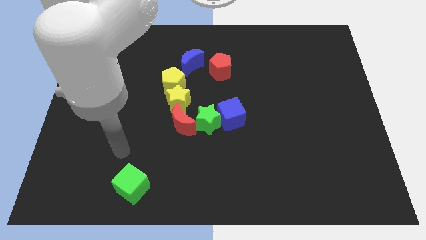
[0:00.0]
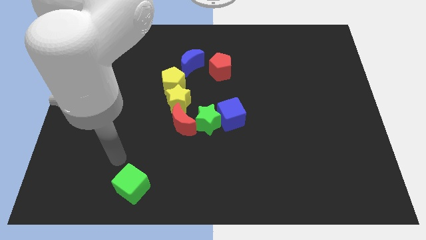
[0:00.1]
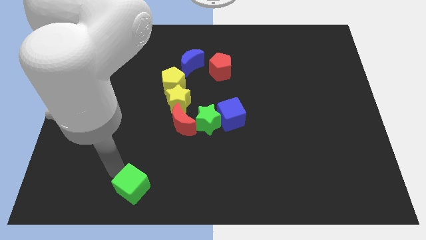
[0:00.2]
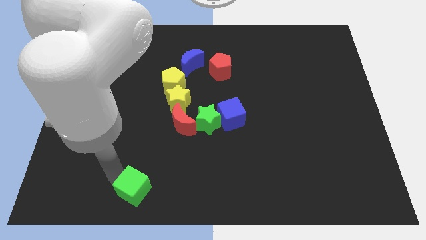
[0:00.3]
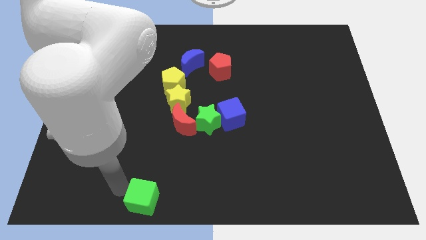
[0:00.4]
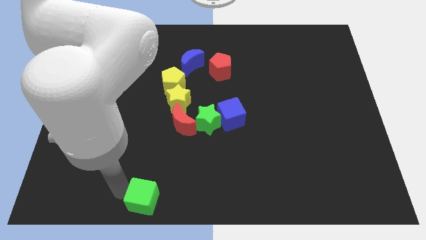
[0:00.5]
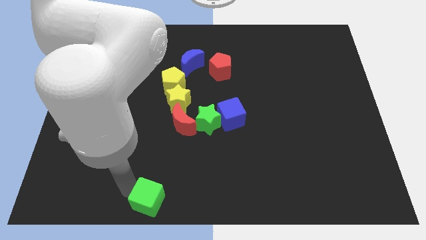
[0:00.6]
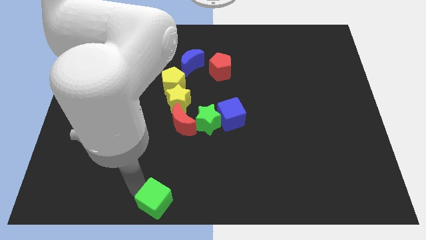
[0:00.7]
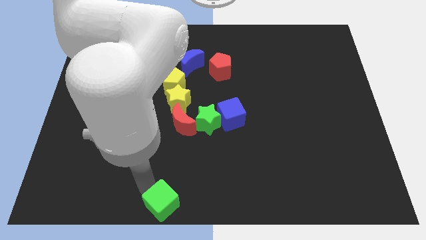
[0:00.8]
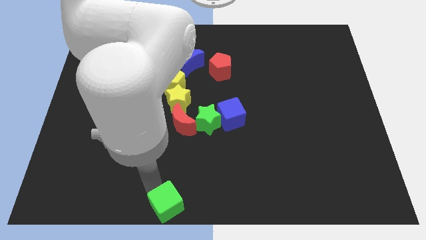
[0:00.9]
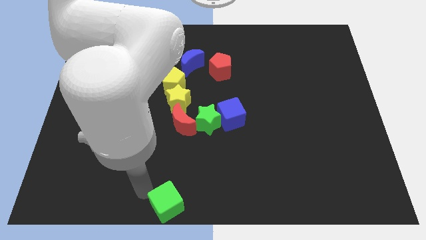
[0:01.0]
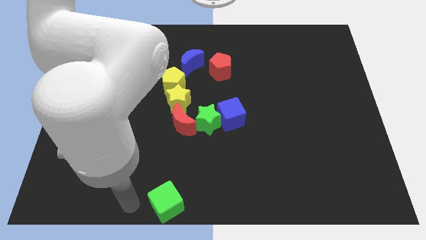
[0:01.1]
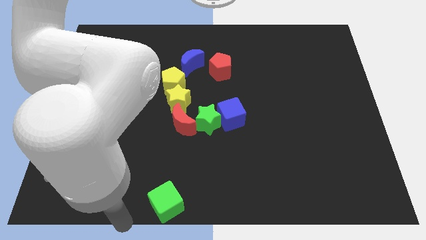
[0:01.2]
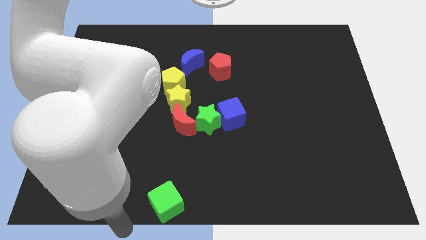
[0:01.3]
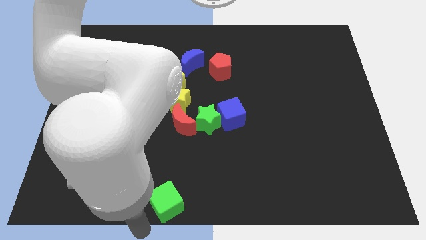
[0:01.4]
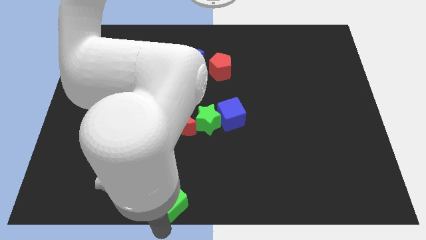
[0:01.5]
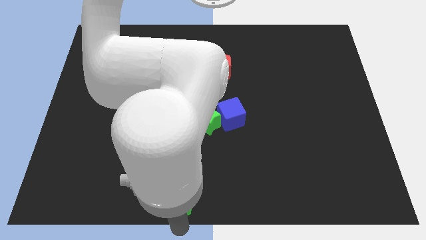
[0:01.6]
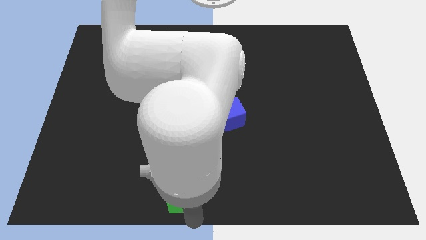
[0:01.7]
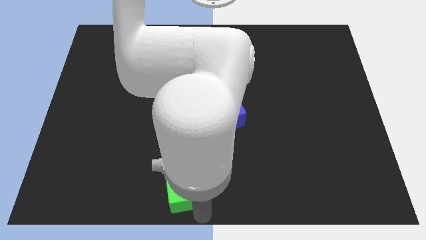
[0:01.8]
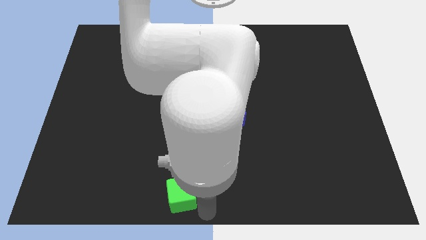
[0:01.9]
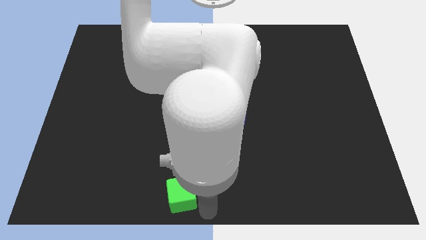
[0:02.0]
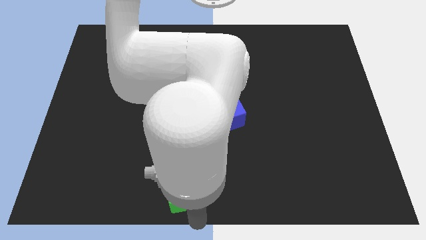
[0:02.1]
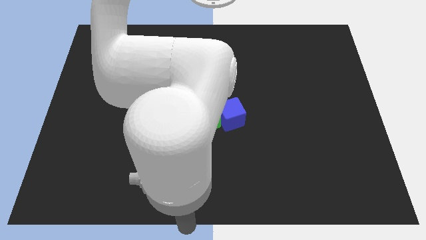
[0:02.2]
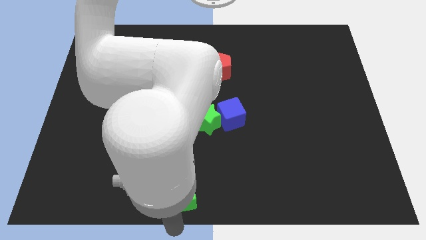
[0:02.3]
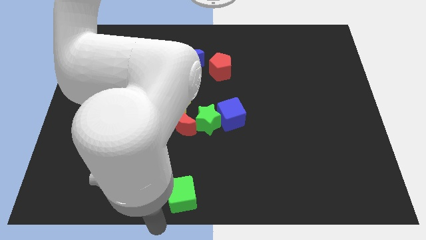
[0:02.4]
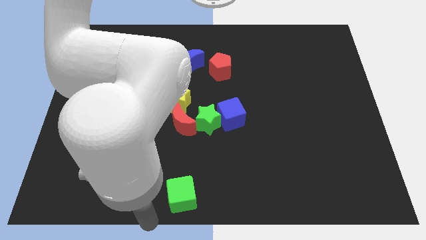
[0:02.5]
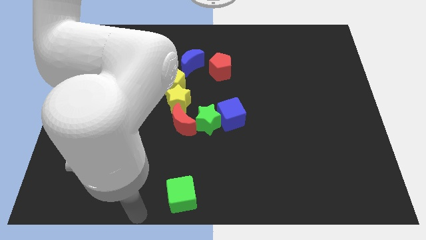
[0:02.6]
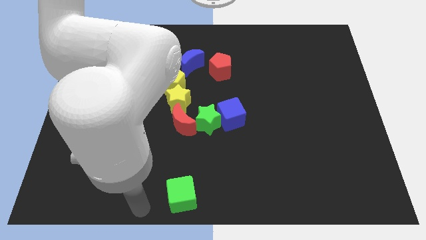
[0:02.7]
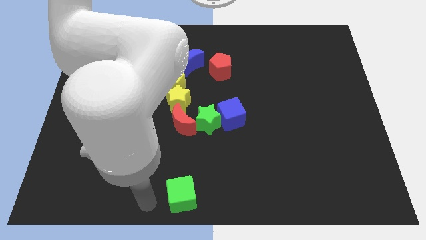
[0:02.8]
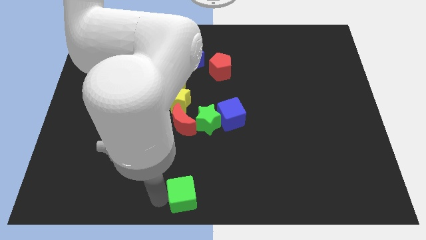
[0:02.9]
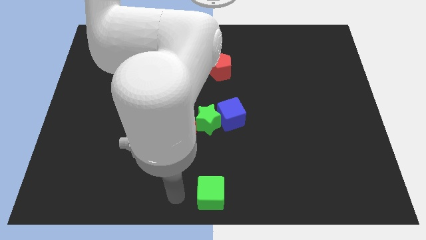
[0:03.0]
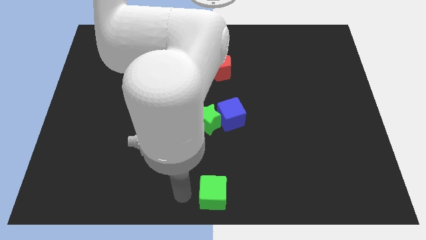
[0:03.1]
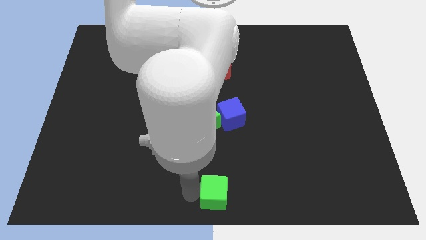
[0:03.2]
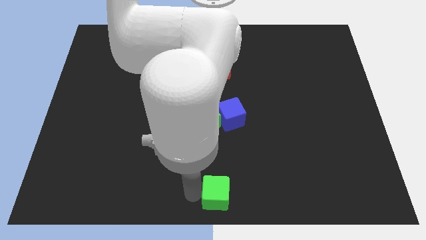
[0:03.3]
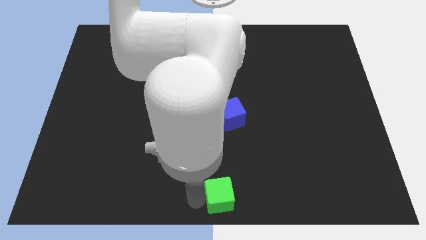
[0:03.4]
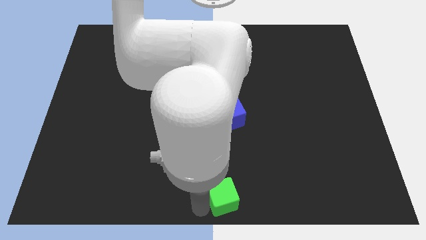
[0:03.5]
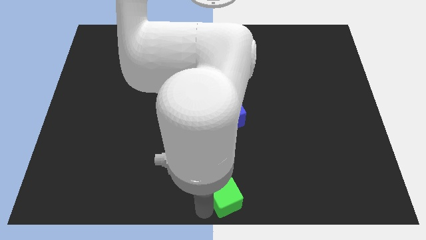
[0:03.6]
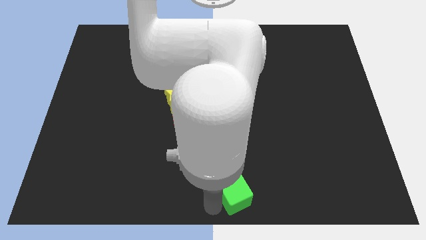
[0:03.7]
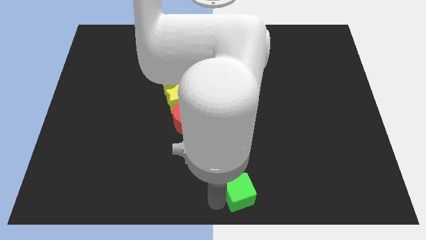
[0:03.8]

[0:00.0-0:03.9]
push green cube to the bottom of blue cube

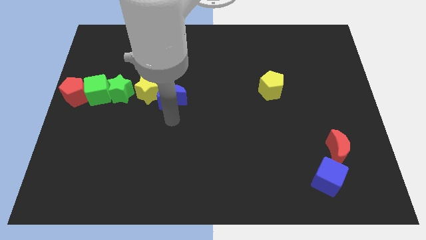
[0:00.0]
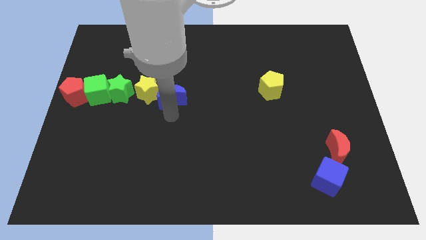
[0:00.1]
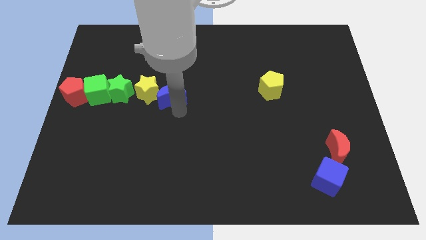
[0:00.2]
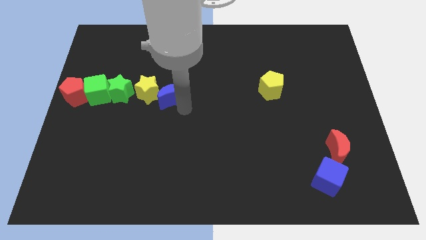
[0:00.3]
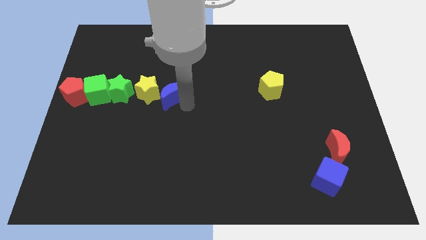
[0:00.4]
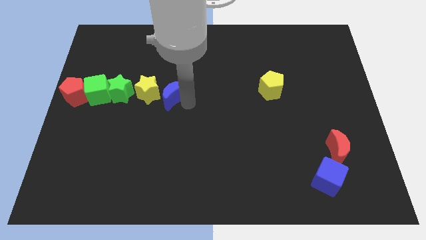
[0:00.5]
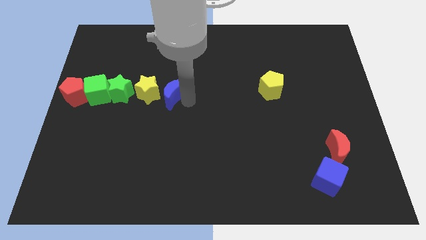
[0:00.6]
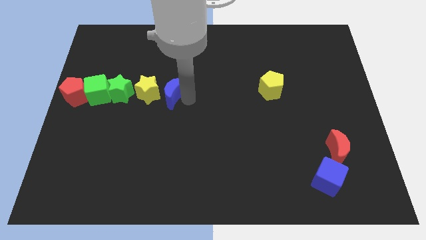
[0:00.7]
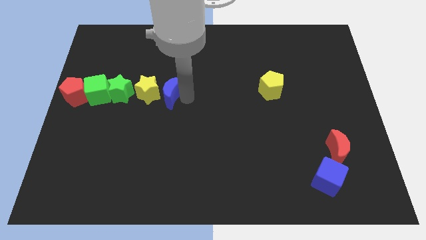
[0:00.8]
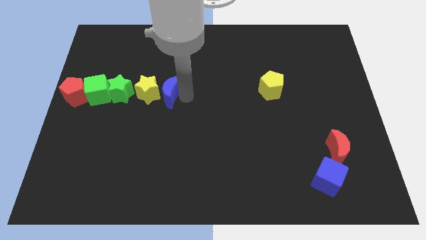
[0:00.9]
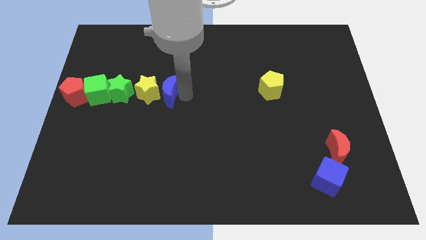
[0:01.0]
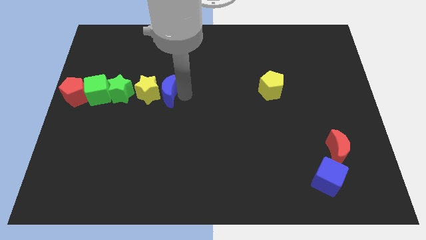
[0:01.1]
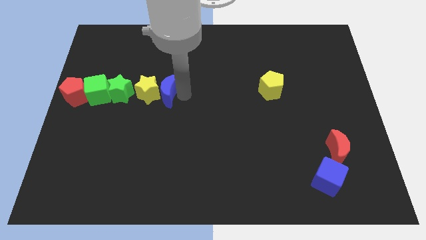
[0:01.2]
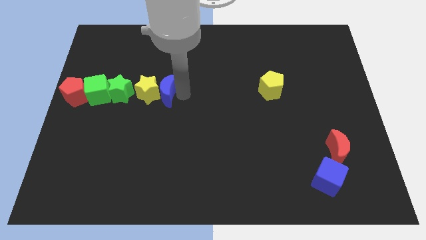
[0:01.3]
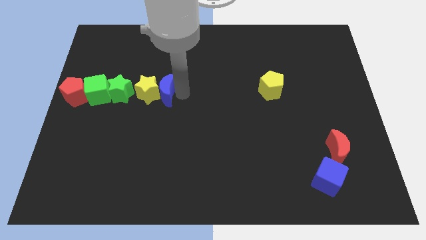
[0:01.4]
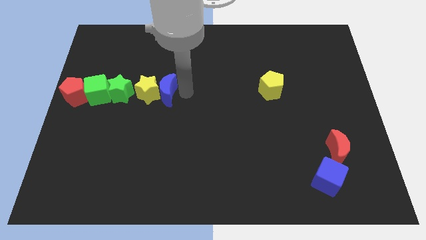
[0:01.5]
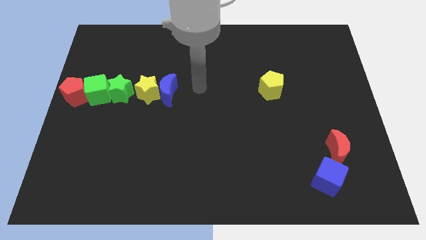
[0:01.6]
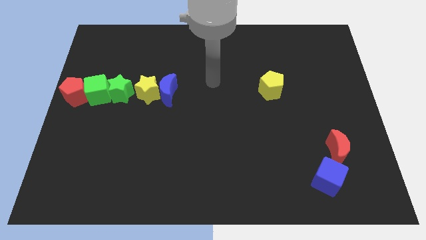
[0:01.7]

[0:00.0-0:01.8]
place the blue moon to the right of the yellow star

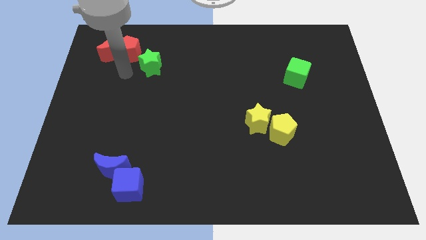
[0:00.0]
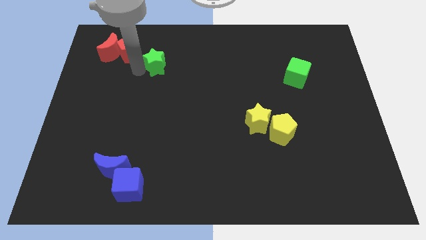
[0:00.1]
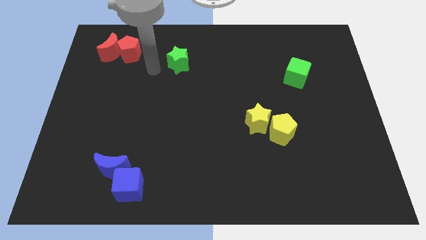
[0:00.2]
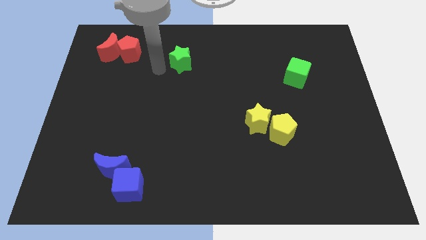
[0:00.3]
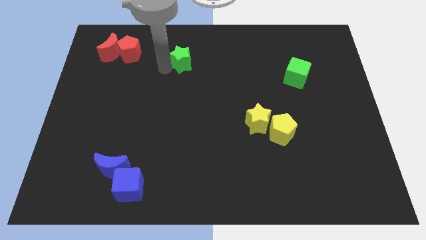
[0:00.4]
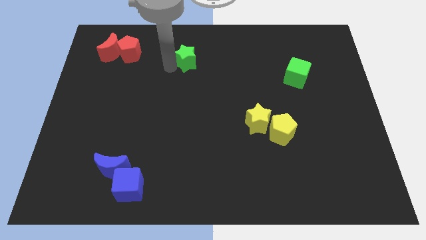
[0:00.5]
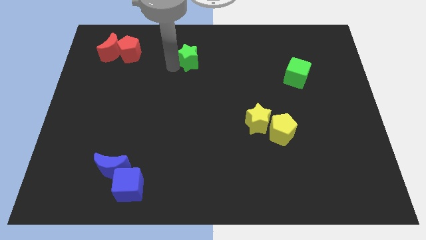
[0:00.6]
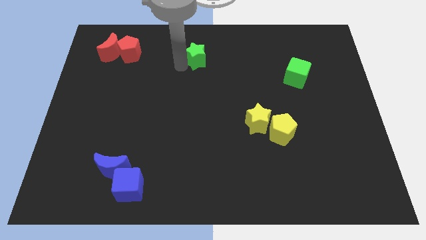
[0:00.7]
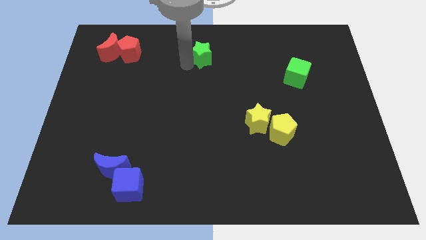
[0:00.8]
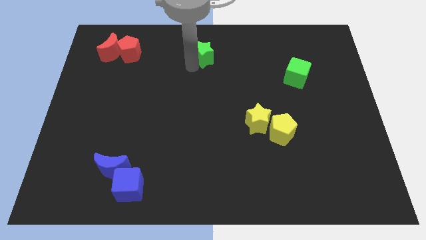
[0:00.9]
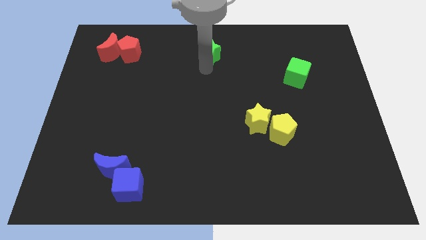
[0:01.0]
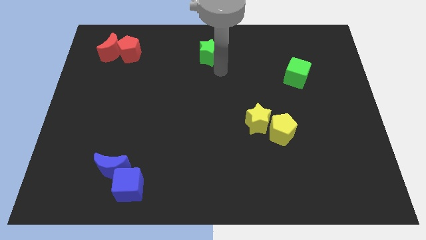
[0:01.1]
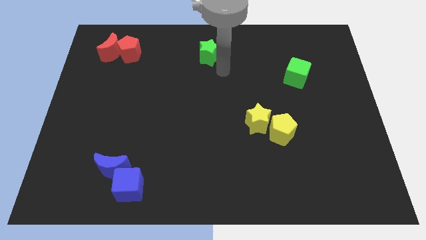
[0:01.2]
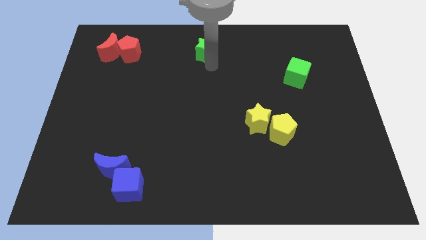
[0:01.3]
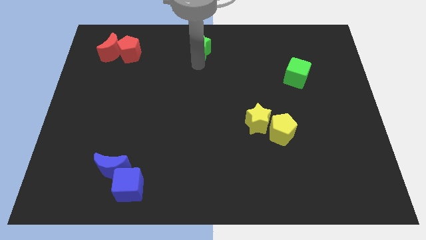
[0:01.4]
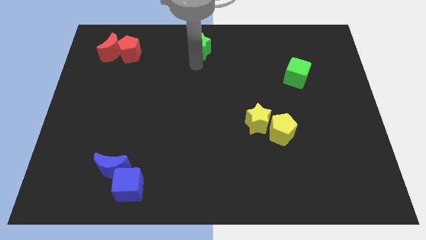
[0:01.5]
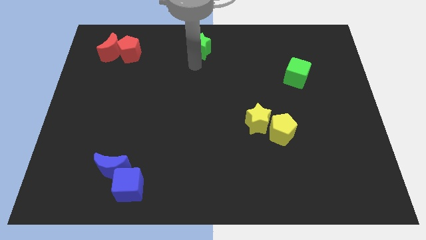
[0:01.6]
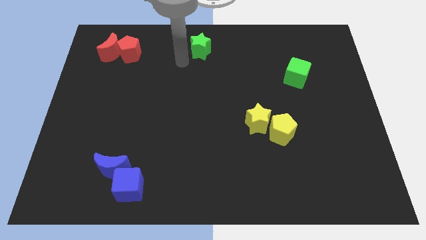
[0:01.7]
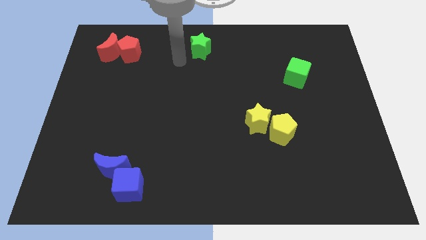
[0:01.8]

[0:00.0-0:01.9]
put the green star parallel to red pentagon

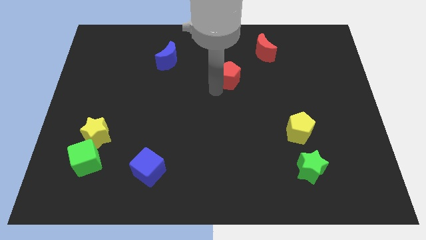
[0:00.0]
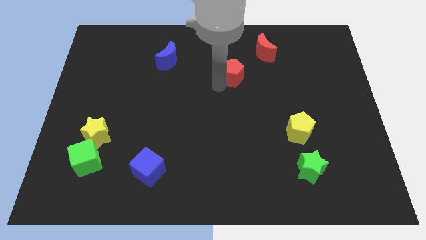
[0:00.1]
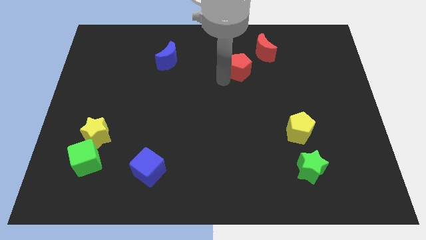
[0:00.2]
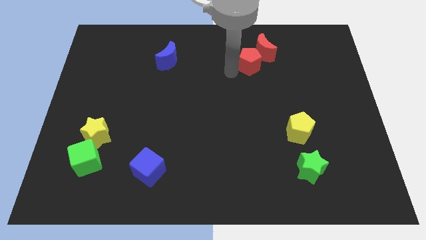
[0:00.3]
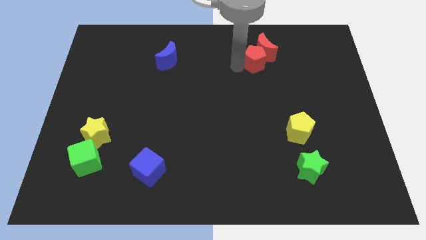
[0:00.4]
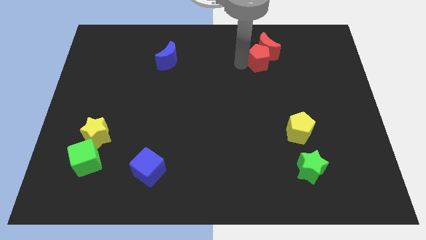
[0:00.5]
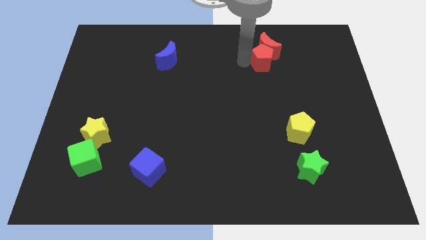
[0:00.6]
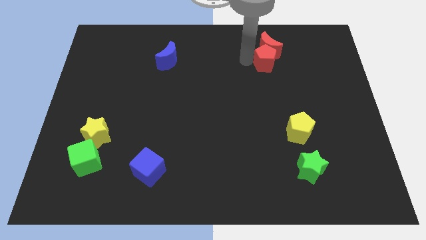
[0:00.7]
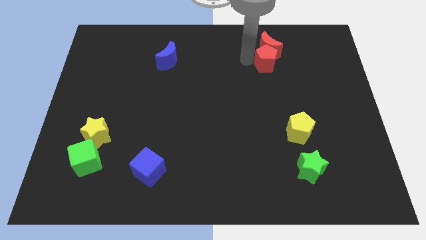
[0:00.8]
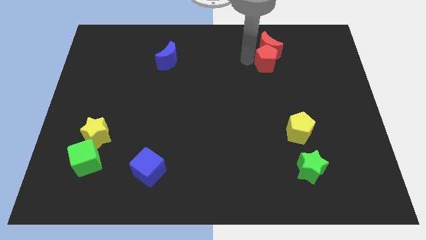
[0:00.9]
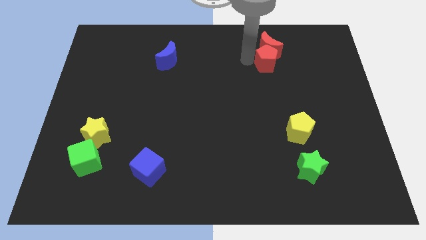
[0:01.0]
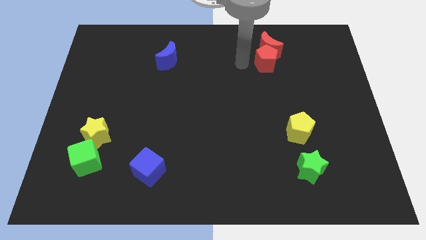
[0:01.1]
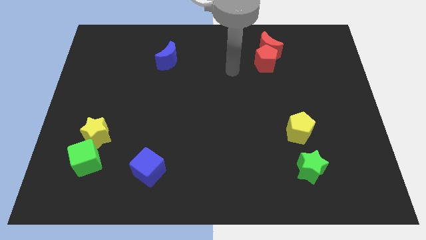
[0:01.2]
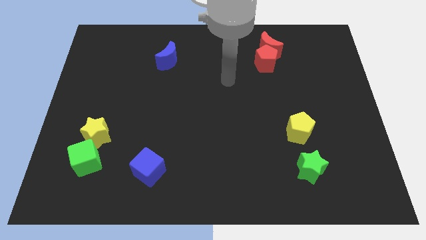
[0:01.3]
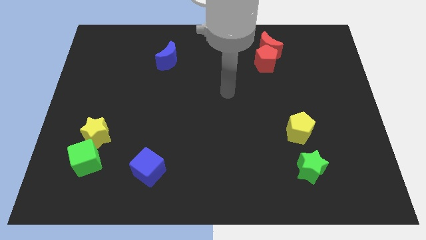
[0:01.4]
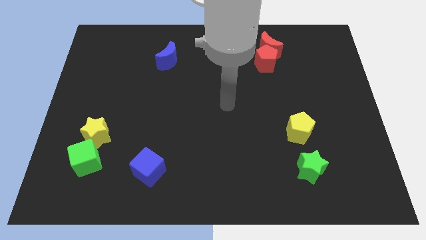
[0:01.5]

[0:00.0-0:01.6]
push the red pentagon into the red moon
